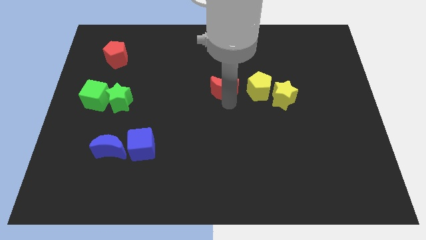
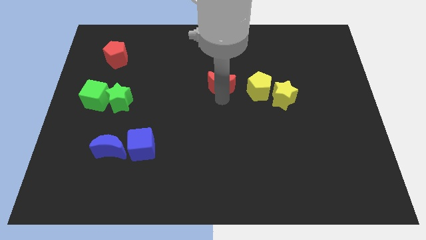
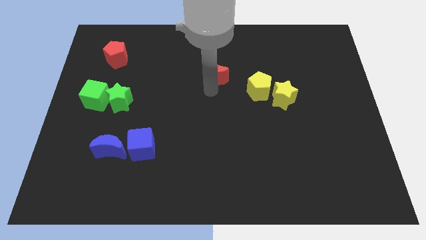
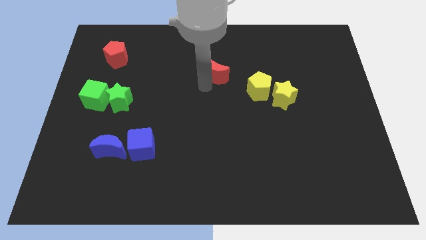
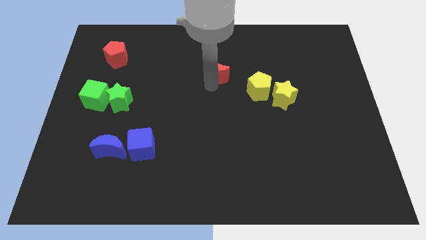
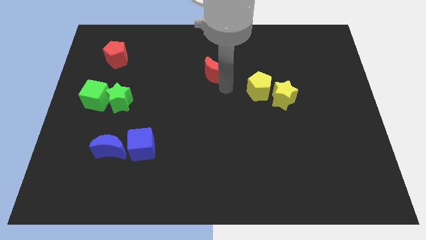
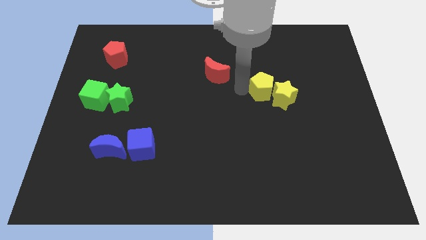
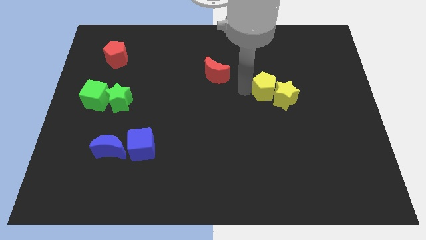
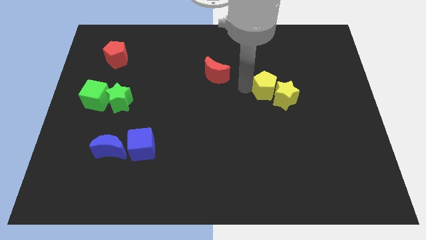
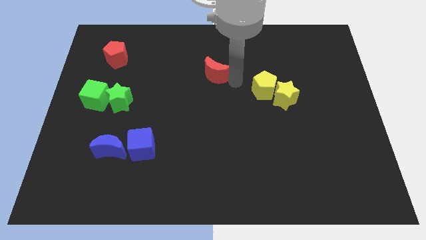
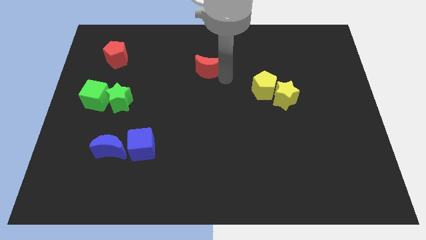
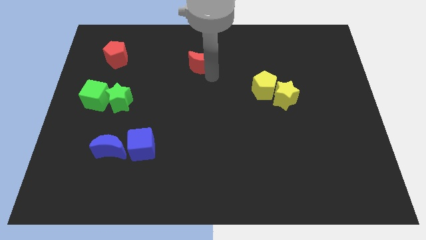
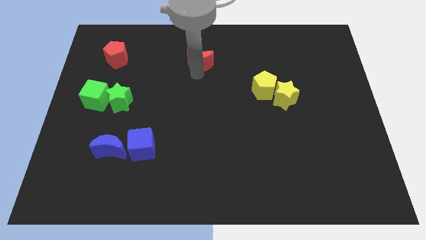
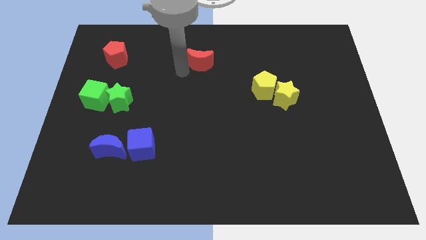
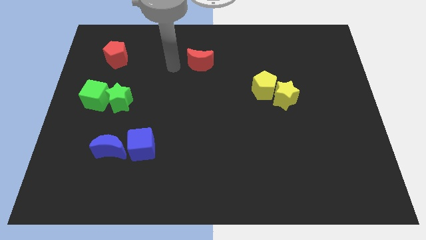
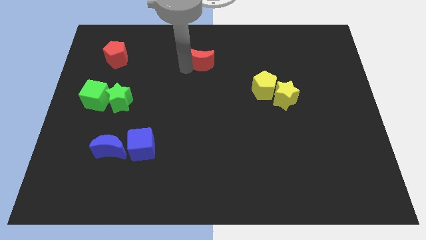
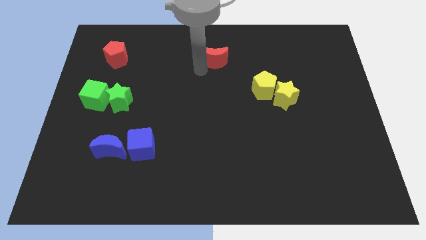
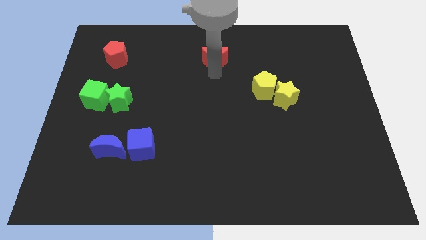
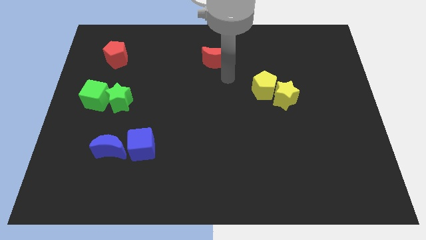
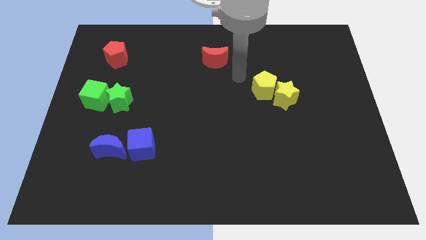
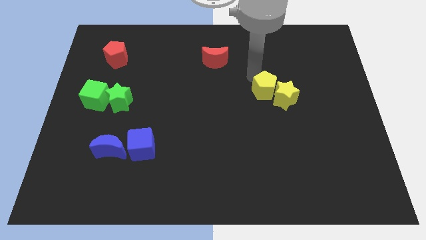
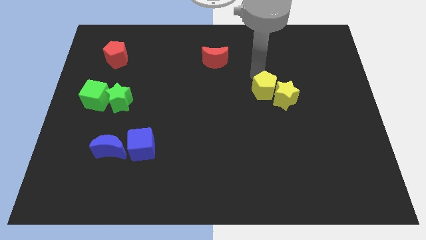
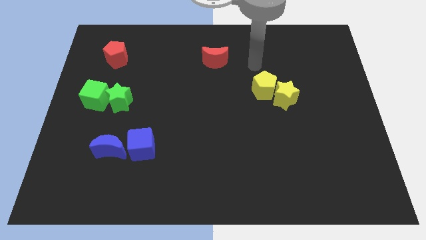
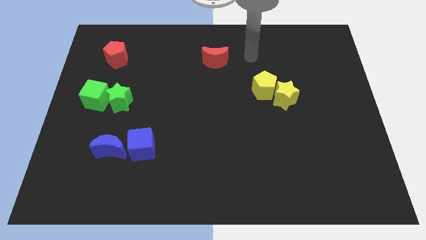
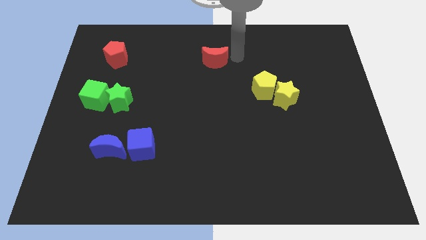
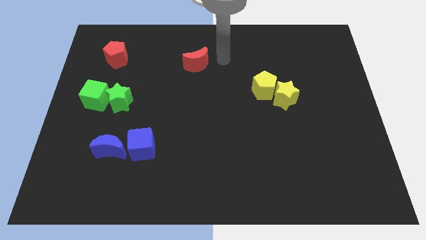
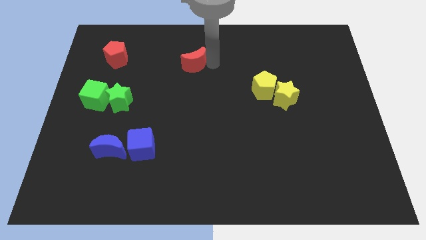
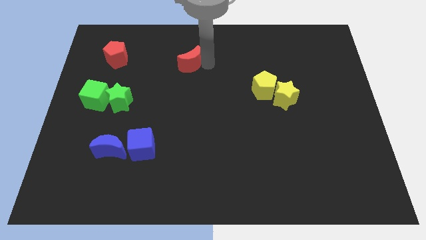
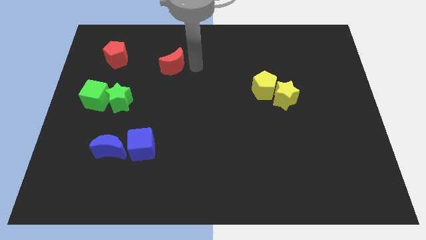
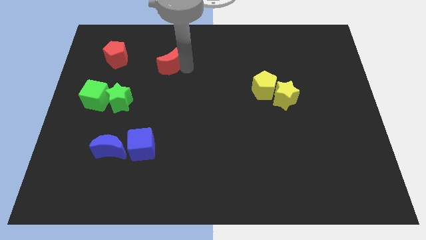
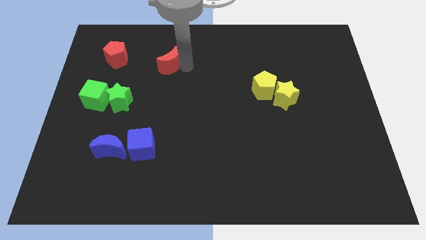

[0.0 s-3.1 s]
push the red moon towards the red pentagon

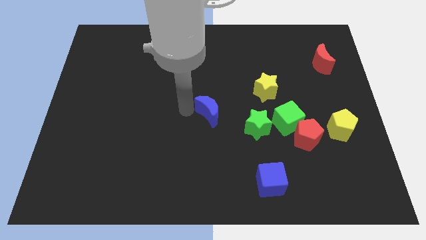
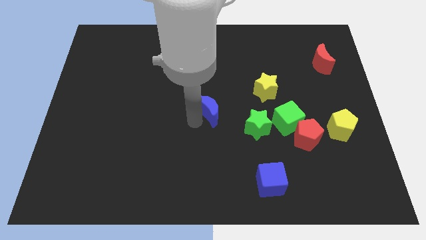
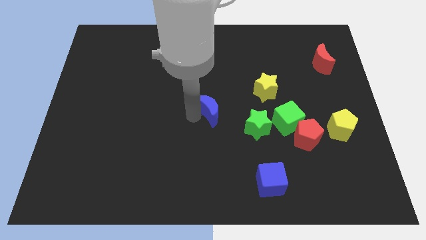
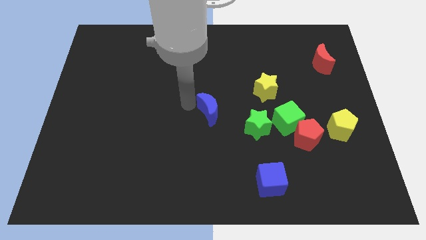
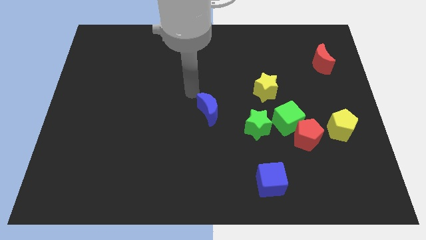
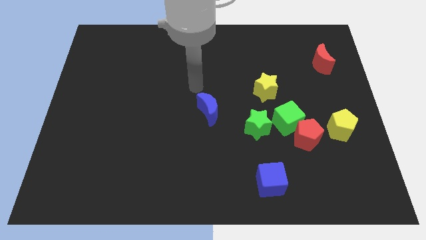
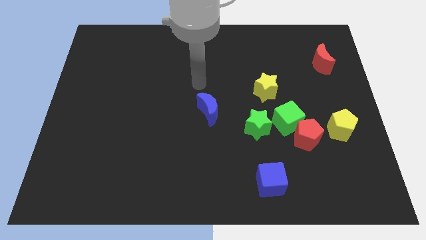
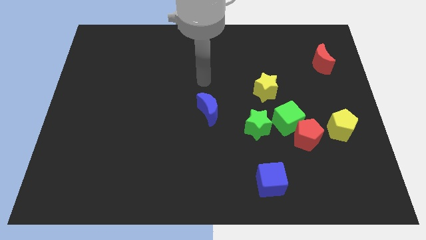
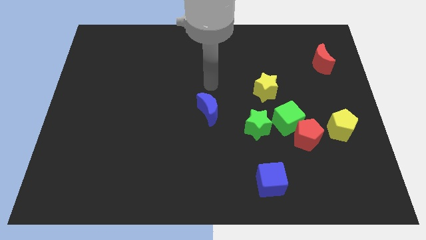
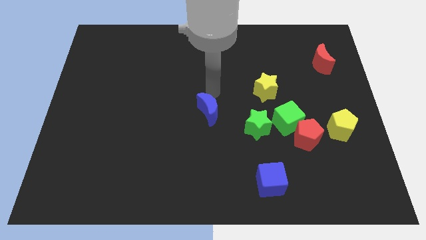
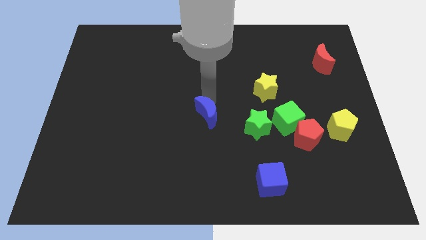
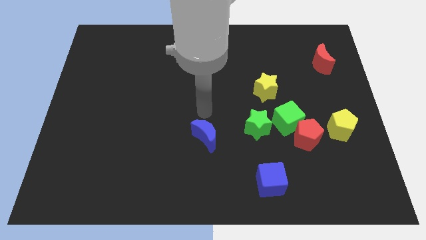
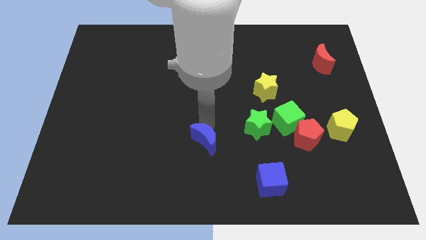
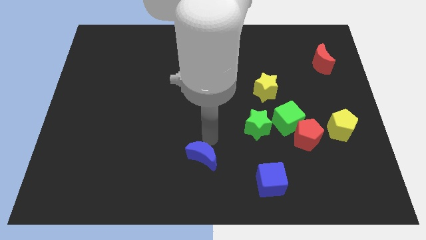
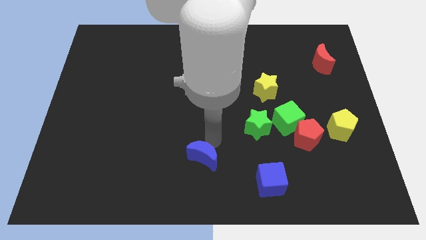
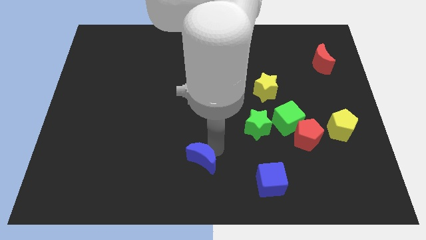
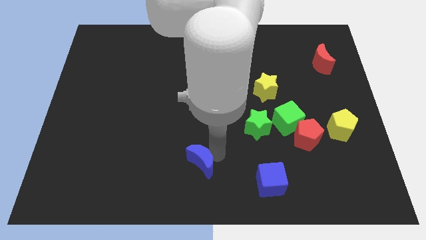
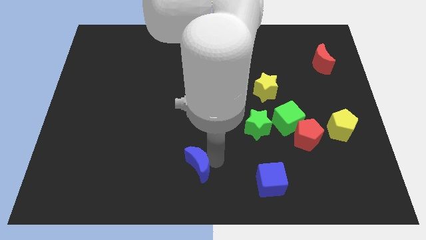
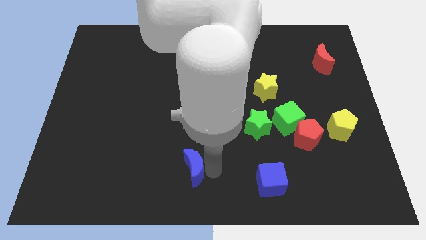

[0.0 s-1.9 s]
push the blue crescent to the bottom

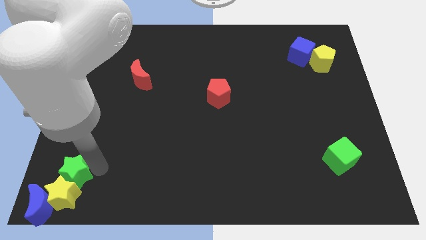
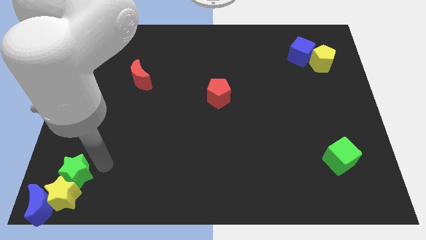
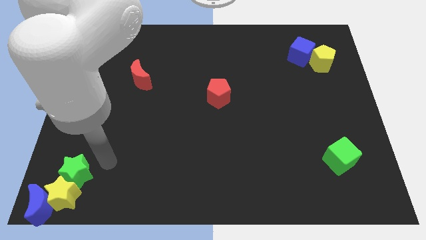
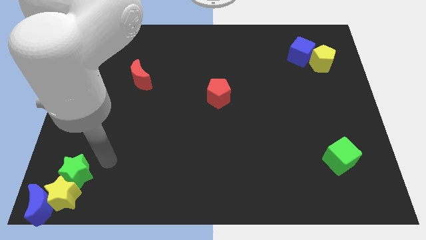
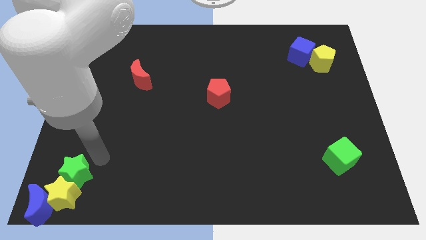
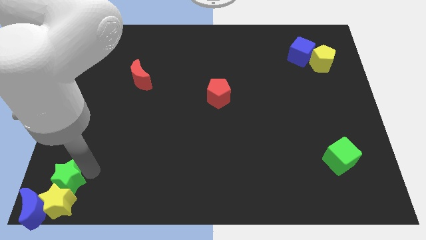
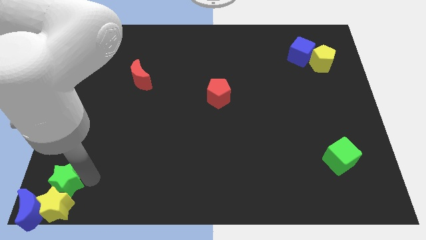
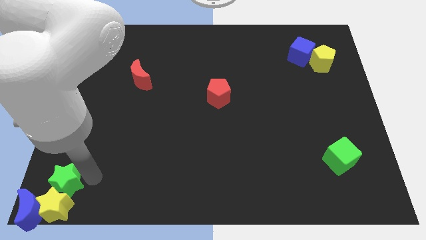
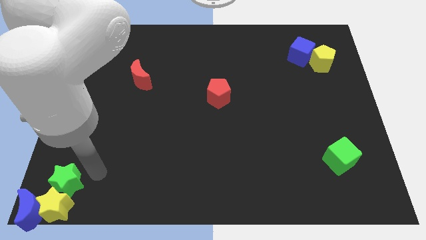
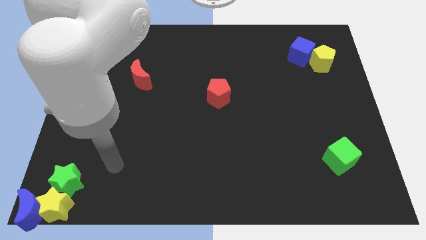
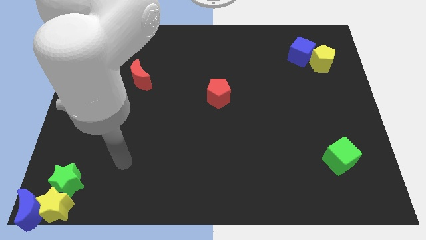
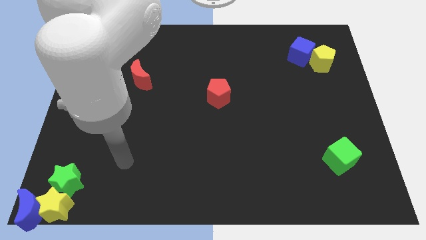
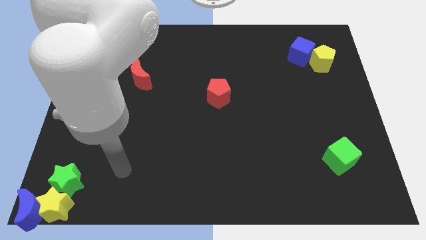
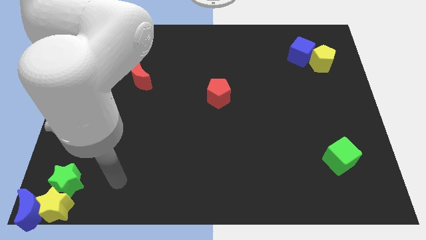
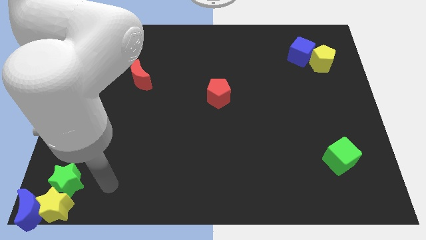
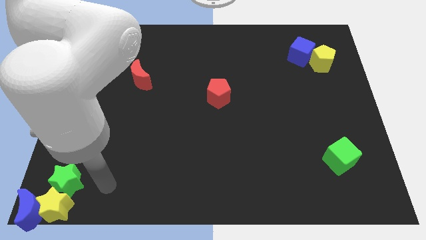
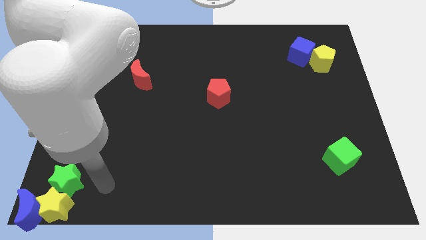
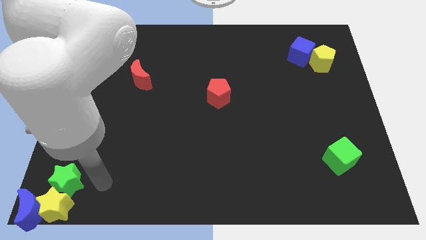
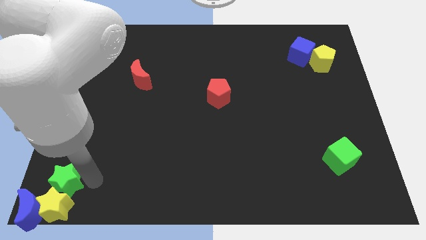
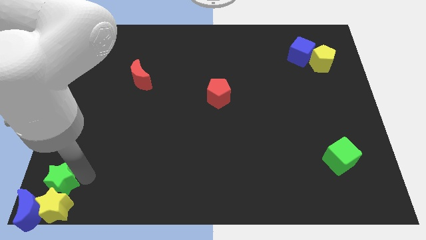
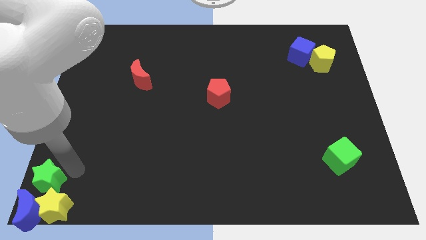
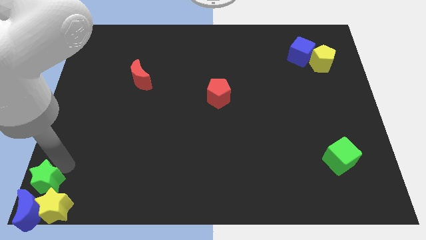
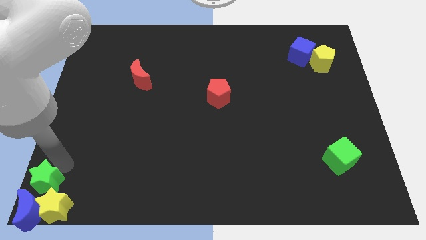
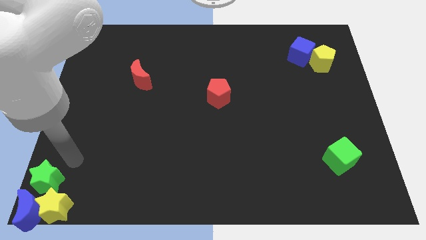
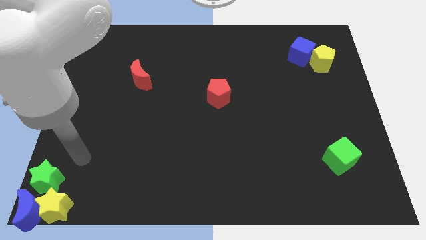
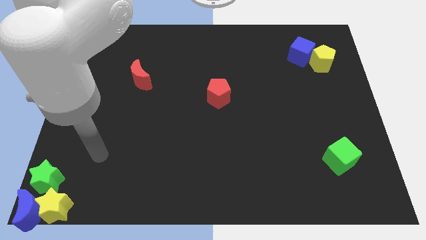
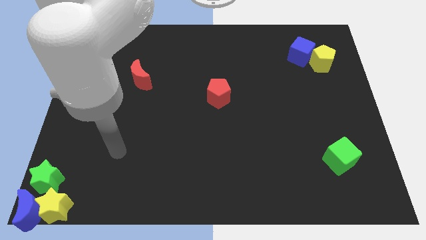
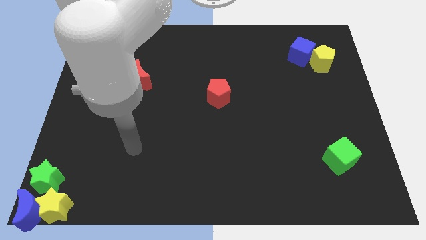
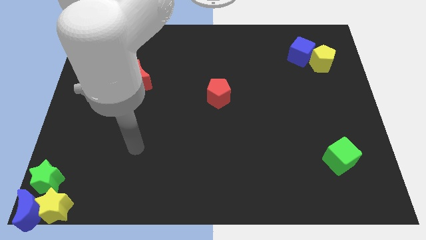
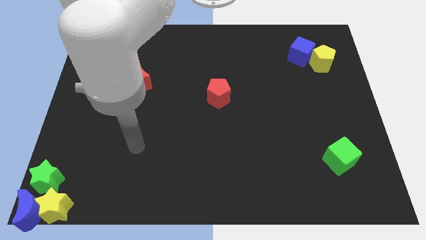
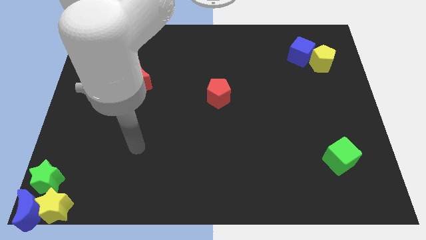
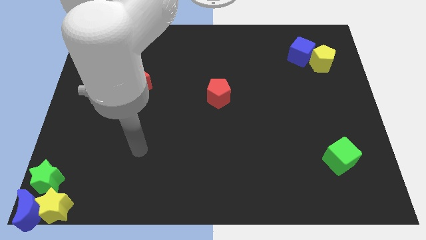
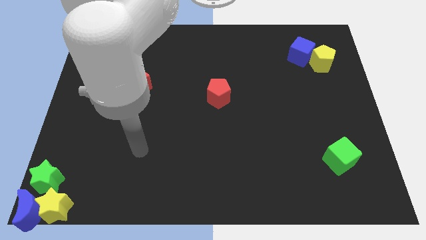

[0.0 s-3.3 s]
move the blue crescent and the group of stars to the bottom left corner of the board

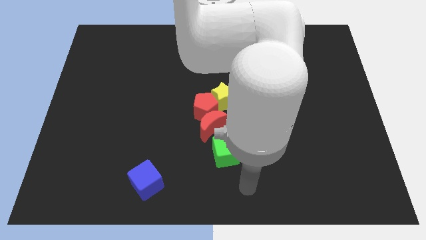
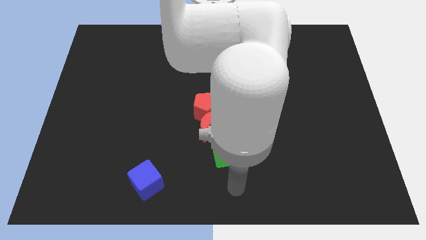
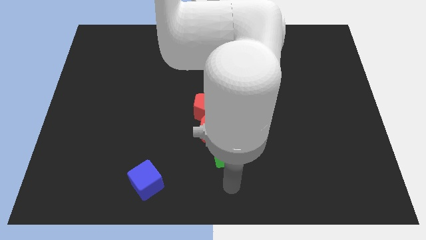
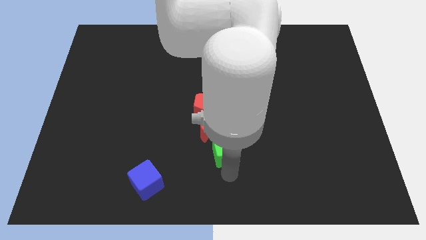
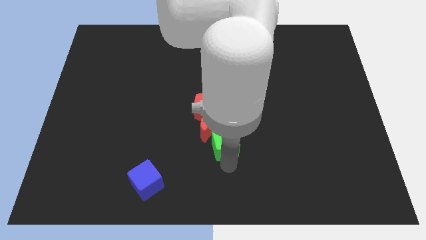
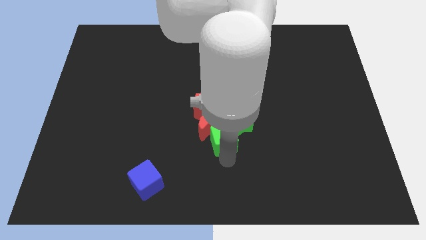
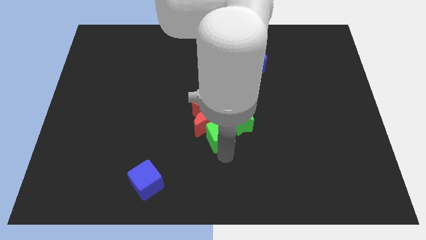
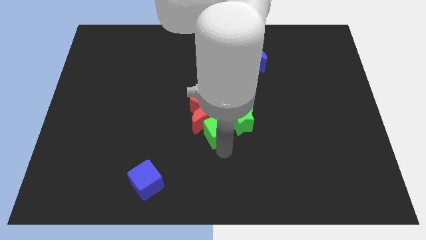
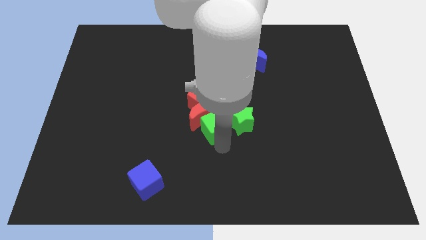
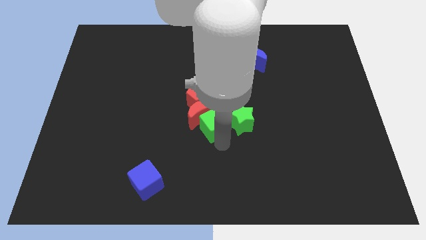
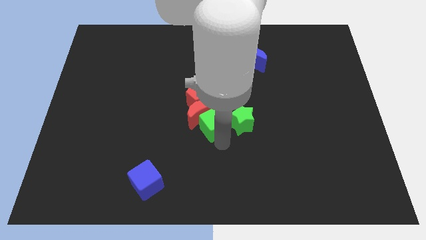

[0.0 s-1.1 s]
push green cube in to red moon
